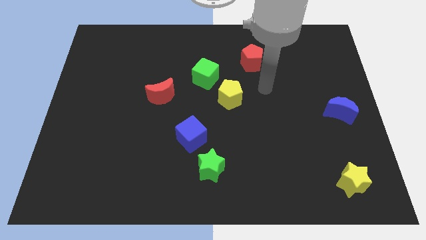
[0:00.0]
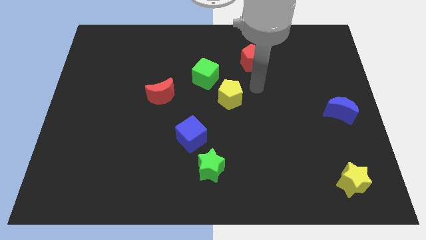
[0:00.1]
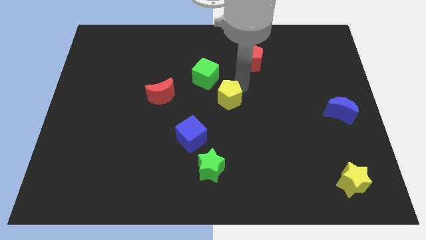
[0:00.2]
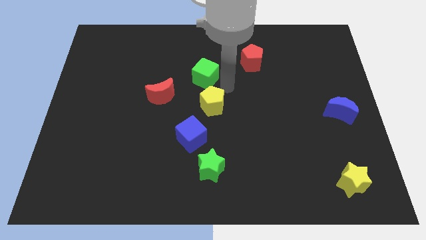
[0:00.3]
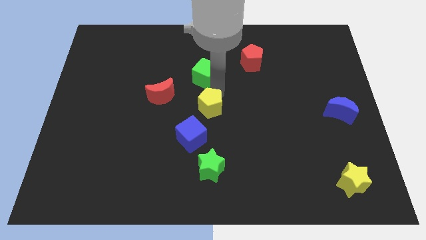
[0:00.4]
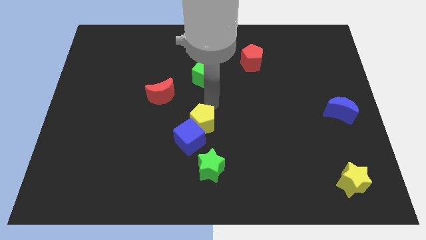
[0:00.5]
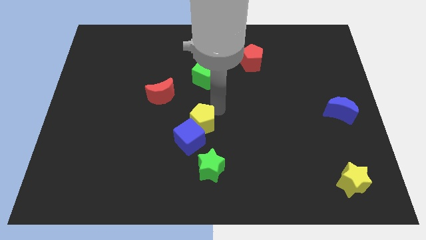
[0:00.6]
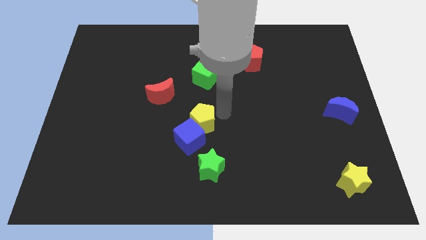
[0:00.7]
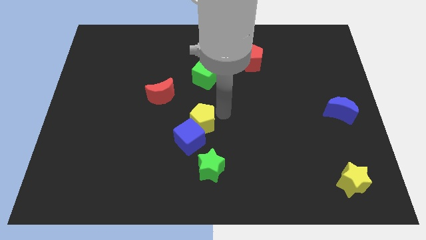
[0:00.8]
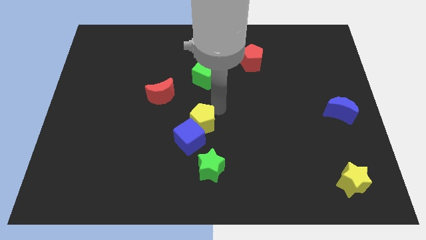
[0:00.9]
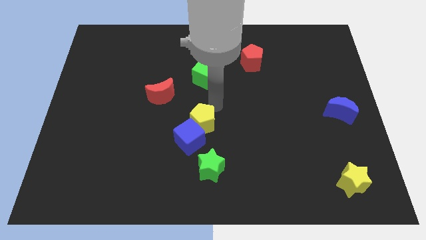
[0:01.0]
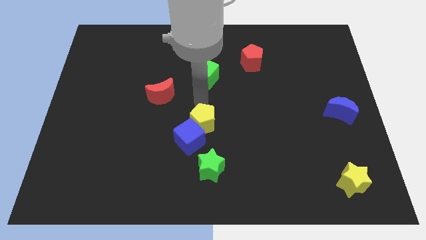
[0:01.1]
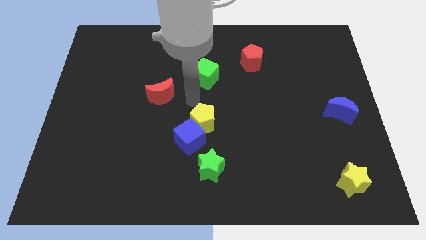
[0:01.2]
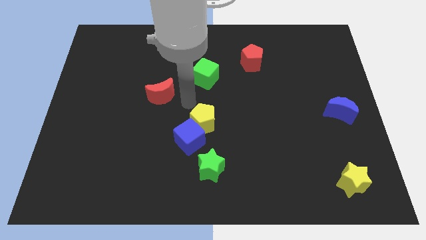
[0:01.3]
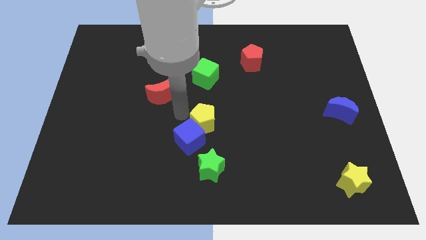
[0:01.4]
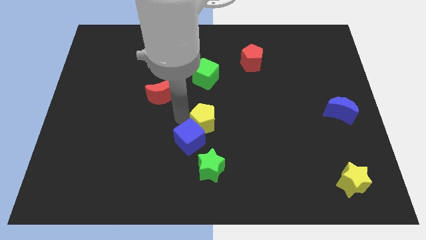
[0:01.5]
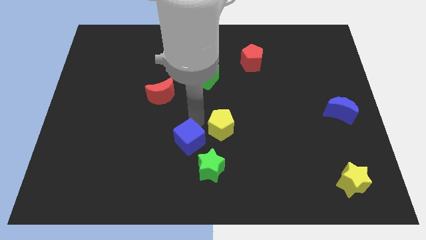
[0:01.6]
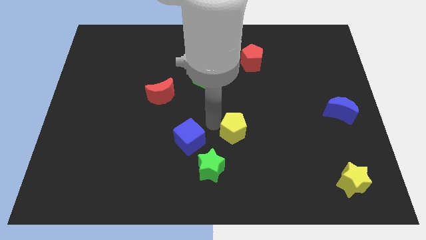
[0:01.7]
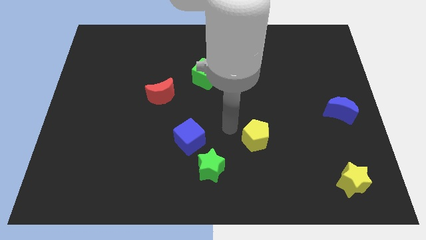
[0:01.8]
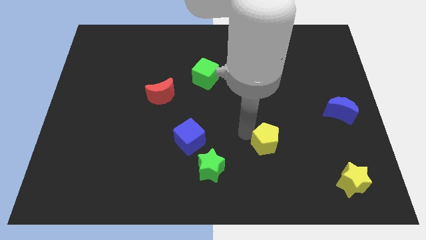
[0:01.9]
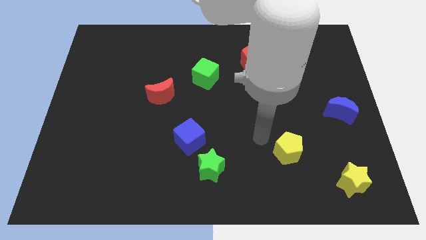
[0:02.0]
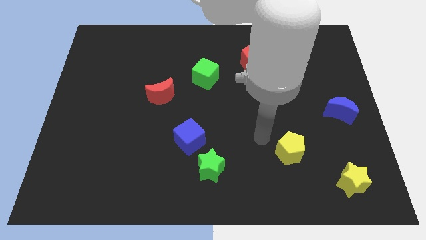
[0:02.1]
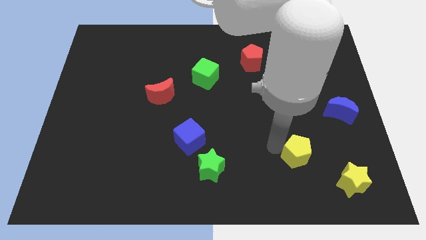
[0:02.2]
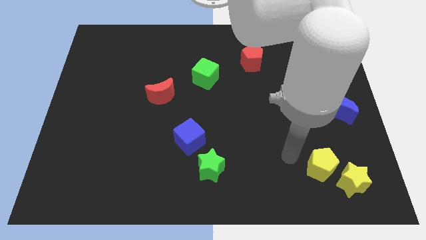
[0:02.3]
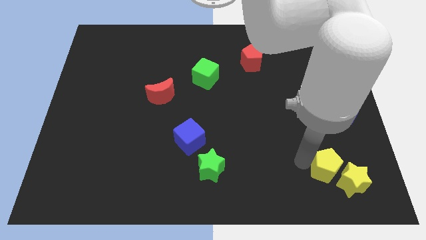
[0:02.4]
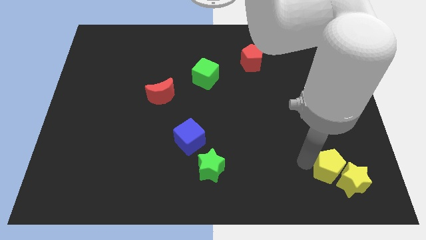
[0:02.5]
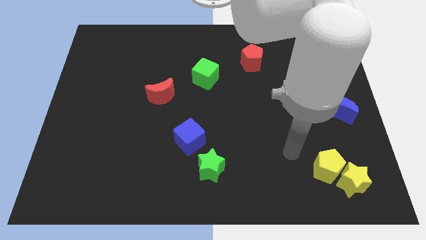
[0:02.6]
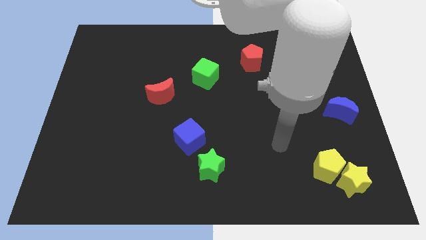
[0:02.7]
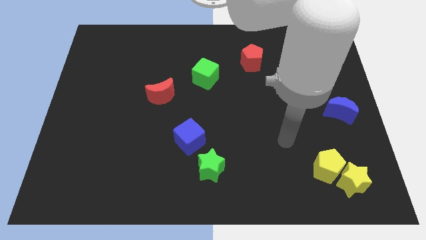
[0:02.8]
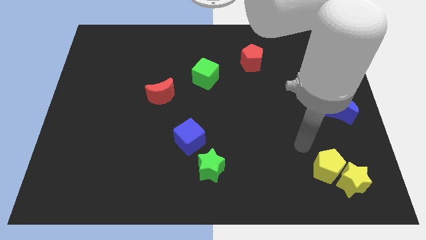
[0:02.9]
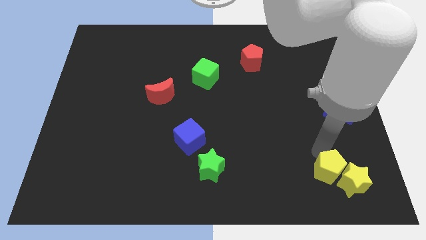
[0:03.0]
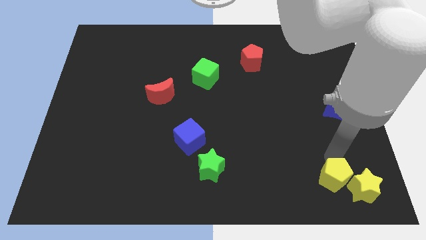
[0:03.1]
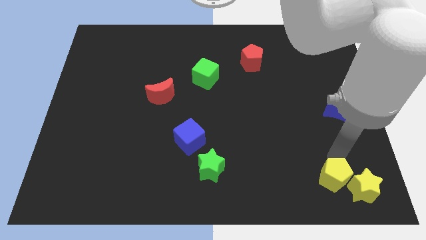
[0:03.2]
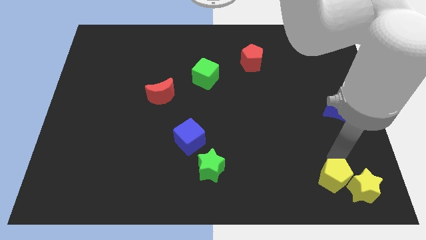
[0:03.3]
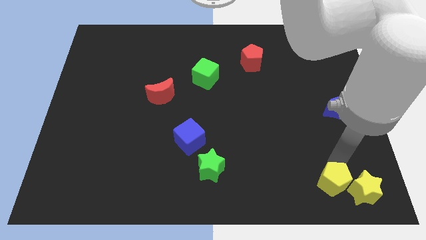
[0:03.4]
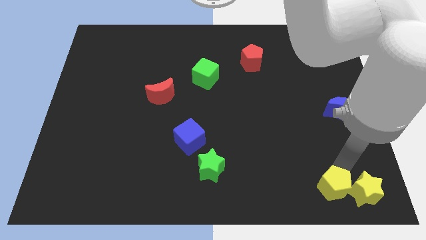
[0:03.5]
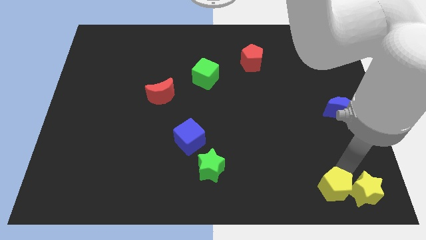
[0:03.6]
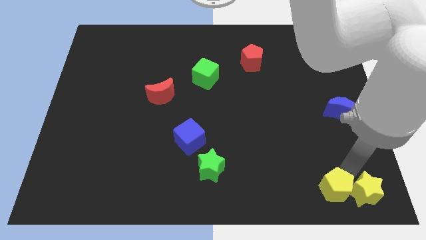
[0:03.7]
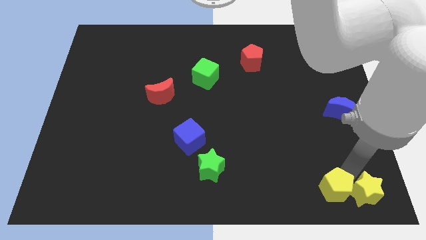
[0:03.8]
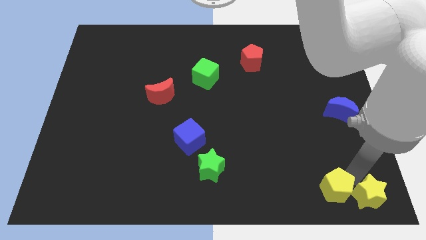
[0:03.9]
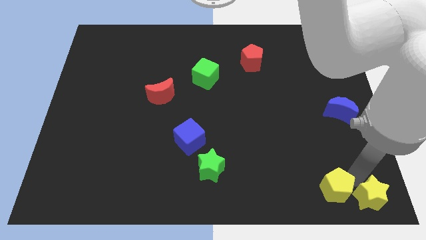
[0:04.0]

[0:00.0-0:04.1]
move yellow pentagon to the left of yellow star

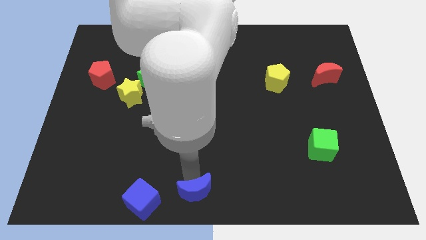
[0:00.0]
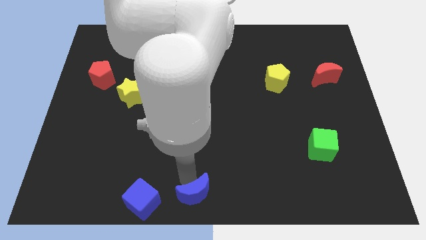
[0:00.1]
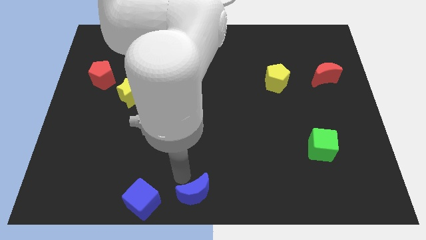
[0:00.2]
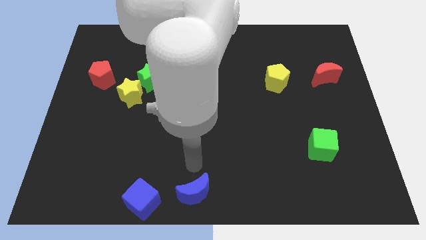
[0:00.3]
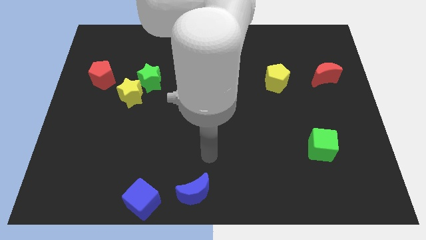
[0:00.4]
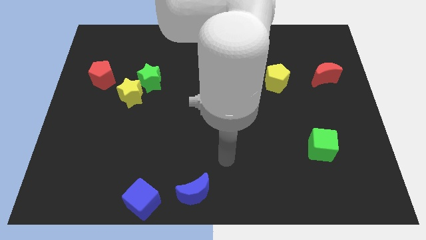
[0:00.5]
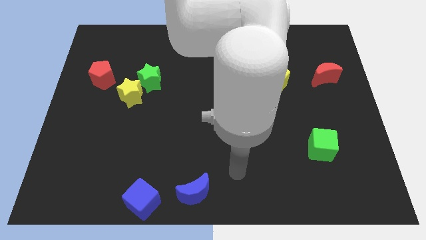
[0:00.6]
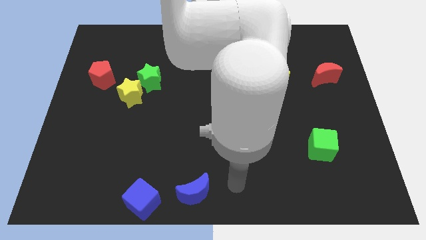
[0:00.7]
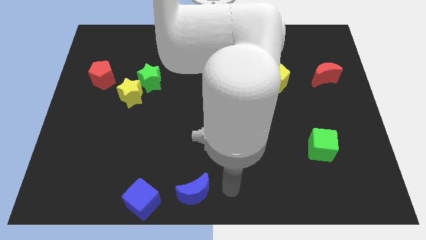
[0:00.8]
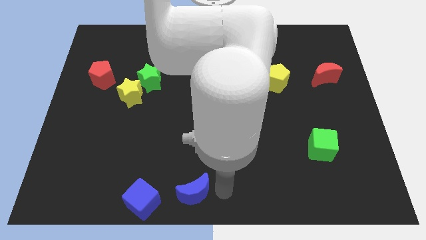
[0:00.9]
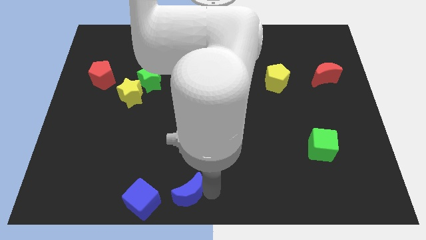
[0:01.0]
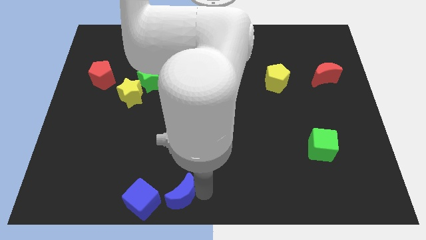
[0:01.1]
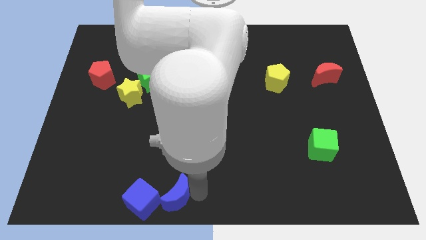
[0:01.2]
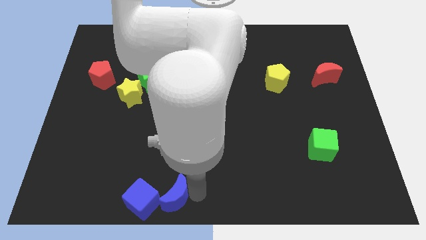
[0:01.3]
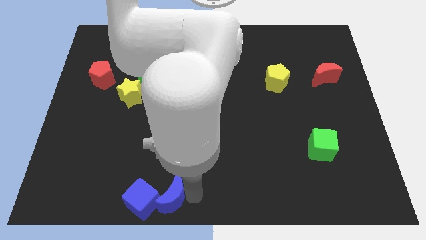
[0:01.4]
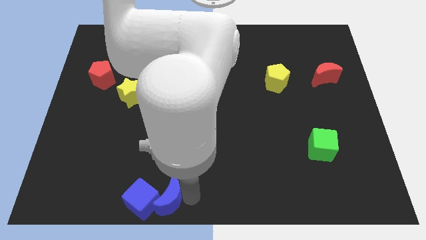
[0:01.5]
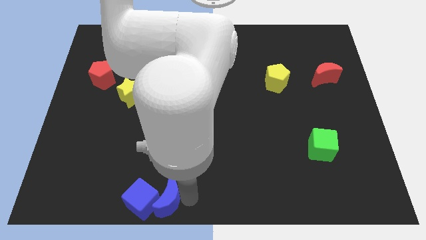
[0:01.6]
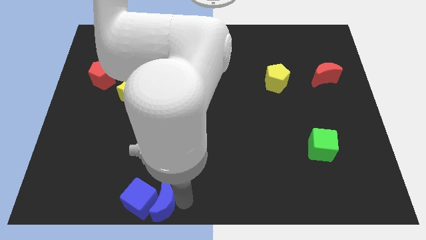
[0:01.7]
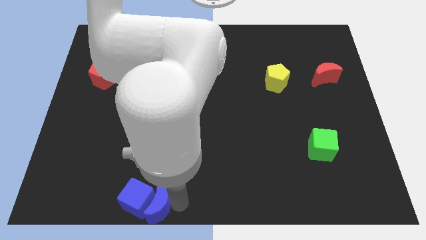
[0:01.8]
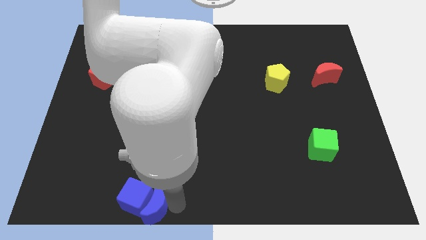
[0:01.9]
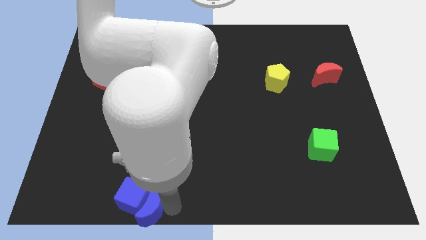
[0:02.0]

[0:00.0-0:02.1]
push blue moon into blue cube

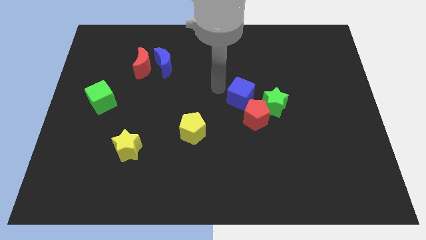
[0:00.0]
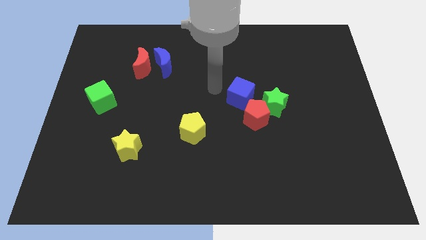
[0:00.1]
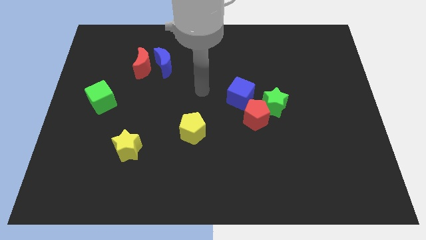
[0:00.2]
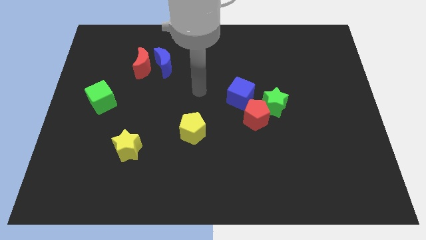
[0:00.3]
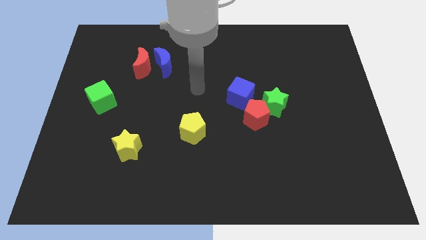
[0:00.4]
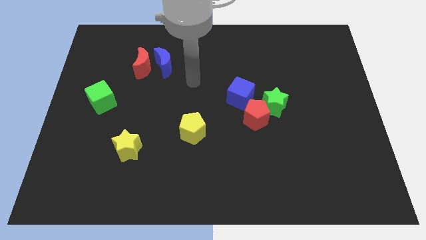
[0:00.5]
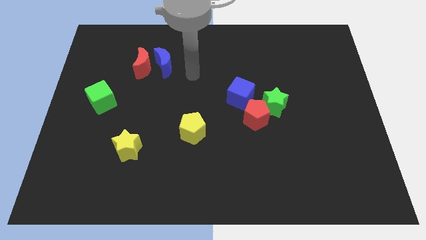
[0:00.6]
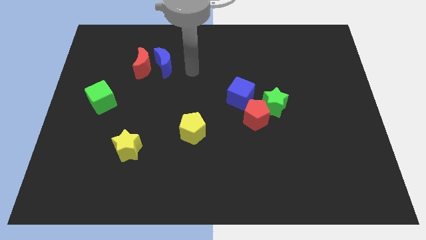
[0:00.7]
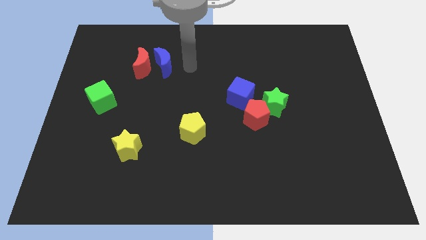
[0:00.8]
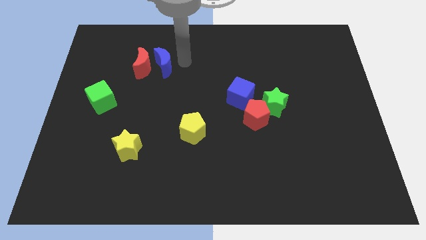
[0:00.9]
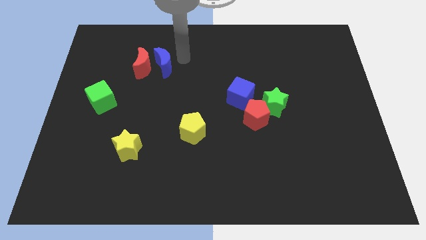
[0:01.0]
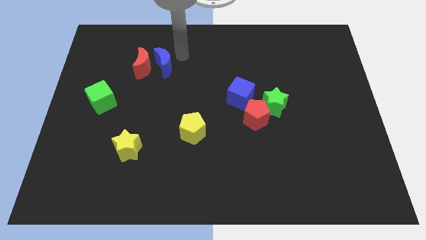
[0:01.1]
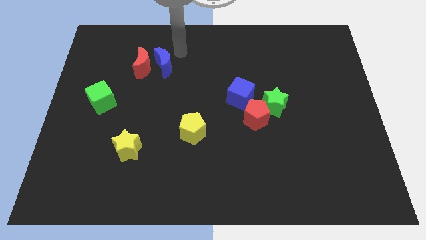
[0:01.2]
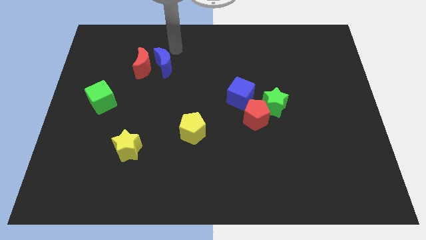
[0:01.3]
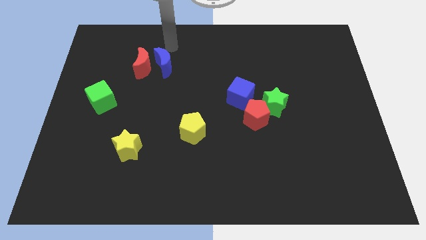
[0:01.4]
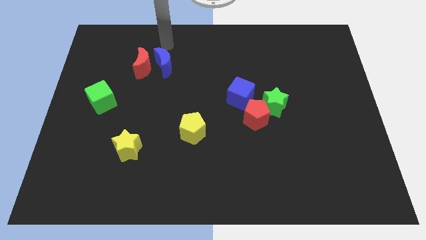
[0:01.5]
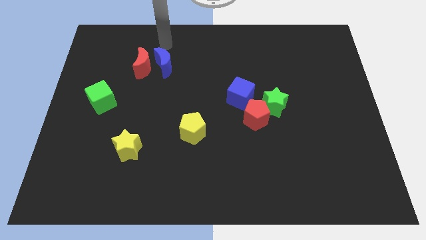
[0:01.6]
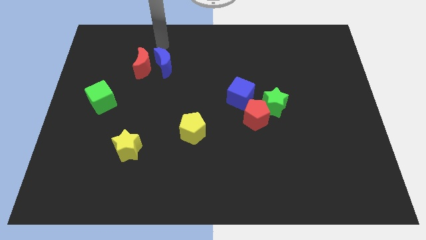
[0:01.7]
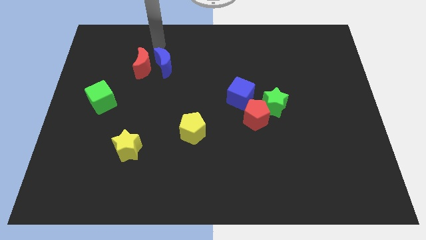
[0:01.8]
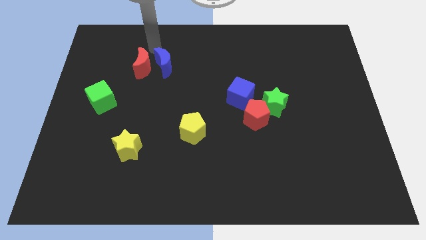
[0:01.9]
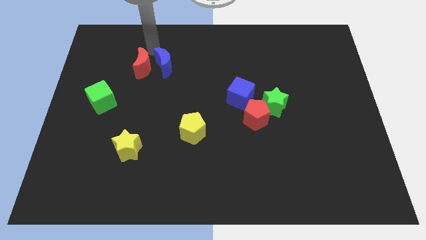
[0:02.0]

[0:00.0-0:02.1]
move your arm away from blue cube

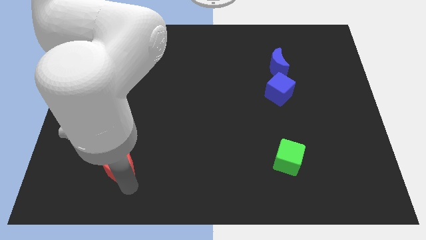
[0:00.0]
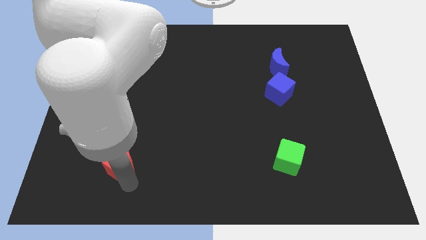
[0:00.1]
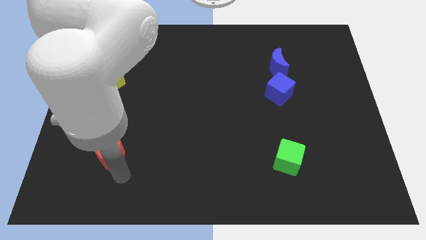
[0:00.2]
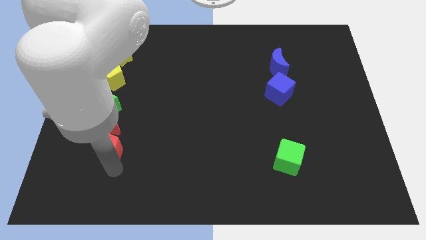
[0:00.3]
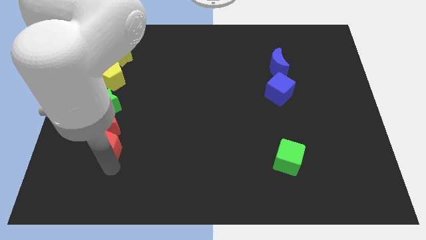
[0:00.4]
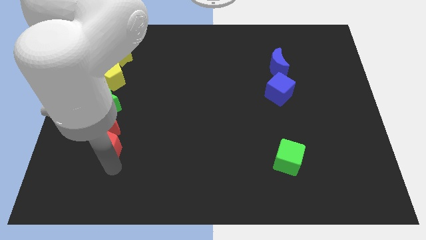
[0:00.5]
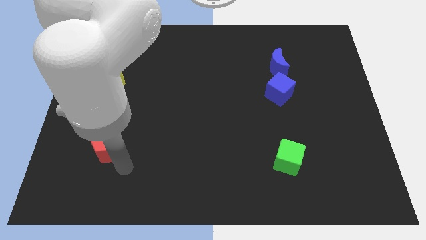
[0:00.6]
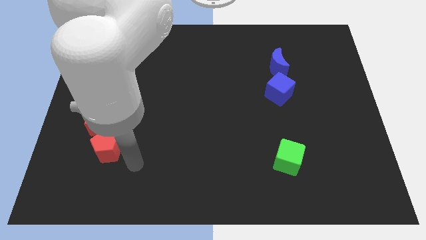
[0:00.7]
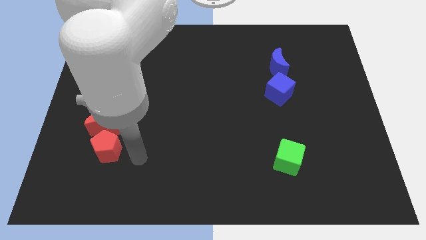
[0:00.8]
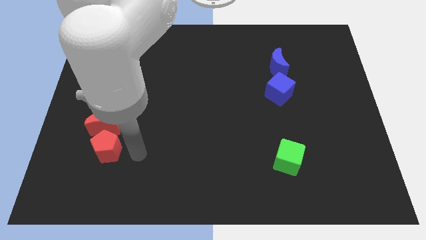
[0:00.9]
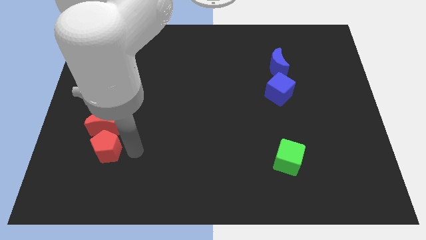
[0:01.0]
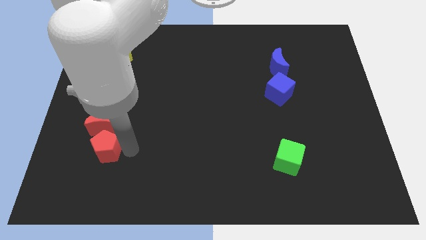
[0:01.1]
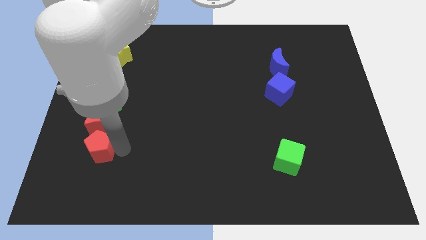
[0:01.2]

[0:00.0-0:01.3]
push red pentagon towards the red moon
